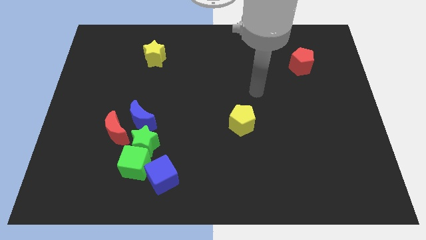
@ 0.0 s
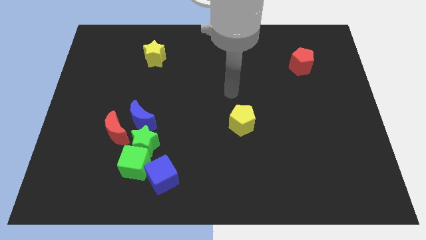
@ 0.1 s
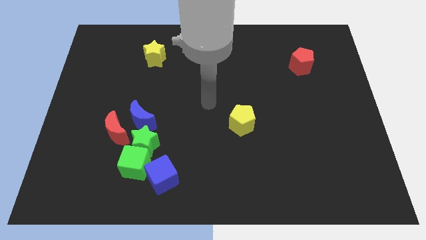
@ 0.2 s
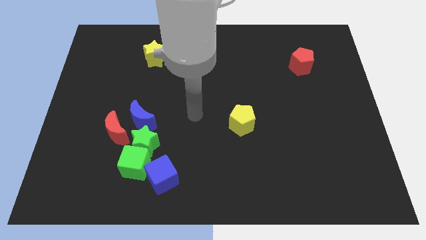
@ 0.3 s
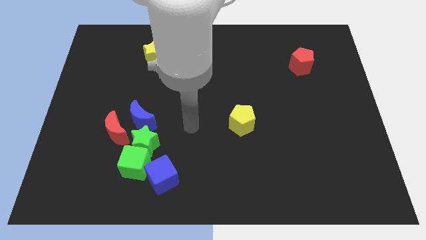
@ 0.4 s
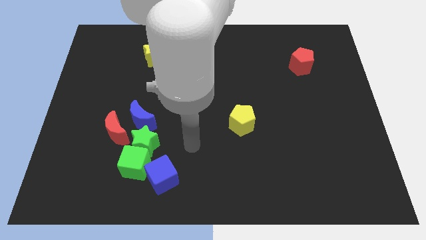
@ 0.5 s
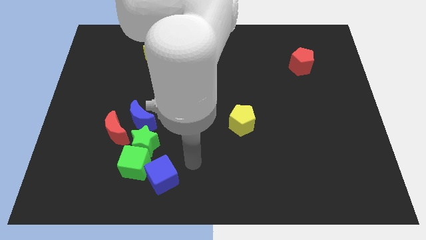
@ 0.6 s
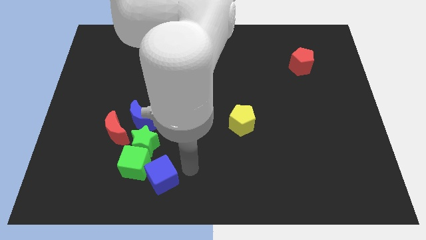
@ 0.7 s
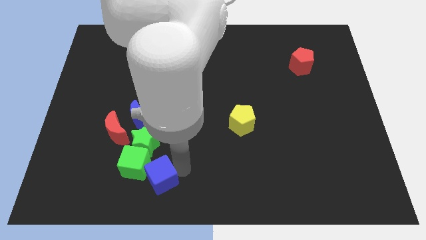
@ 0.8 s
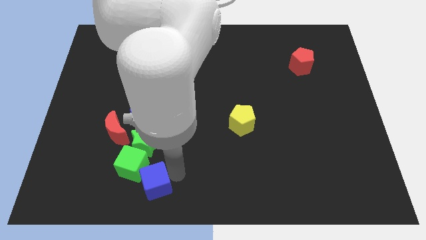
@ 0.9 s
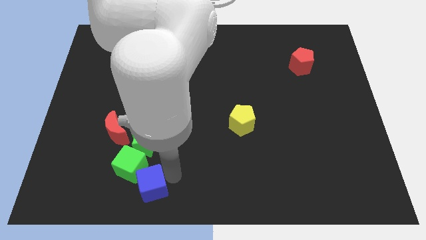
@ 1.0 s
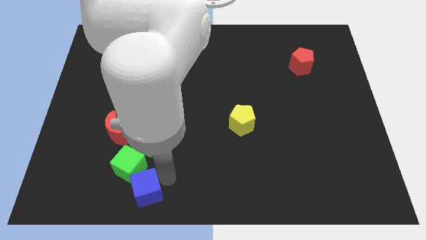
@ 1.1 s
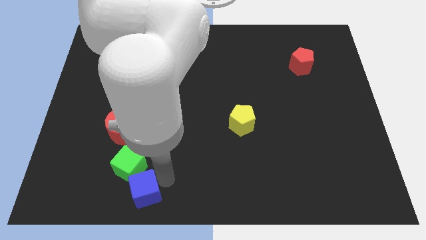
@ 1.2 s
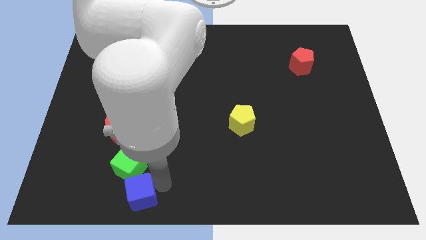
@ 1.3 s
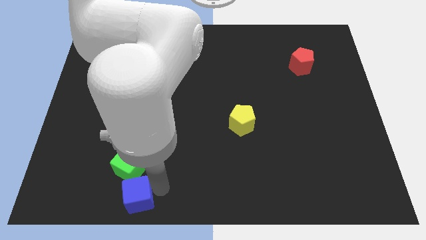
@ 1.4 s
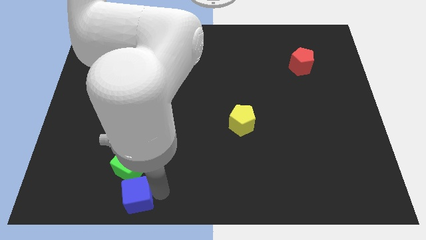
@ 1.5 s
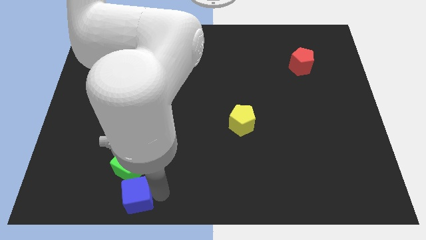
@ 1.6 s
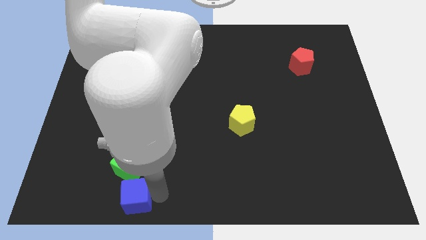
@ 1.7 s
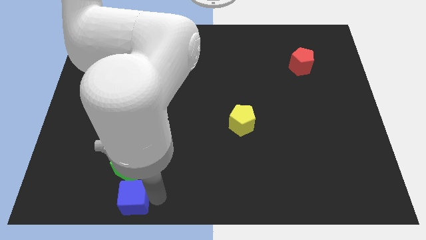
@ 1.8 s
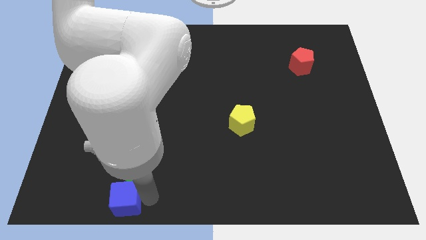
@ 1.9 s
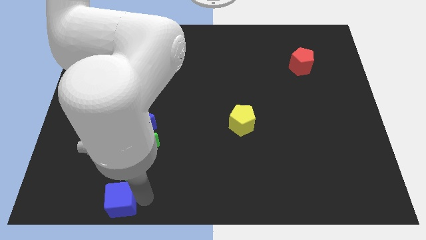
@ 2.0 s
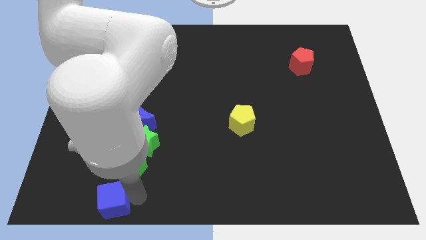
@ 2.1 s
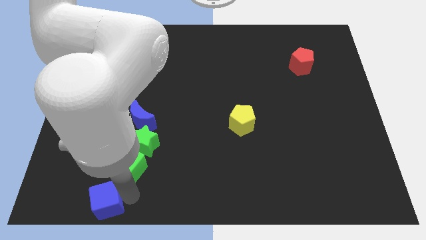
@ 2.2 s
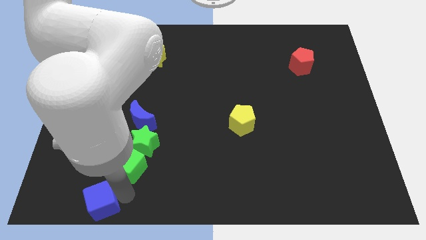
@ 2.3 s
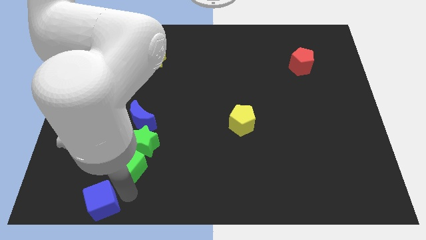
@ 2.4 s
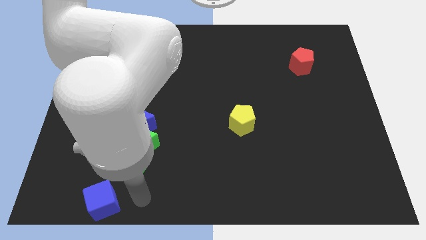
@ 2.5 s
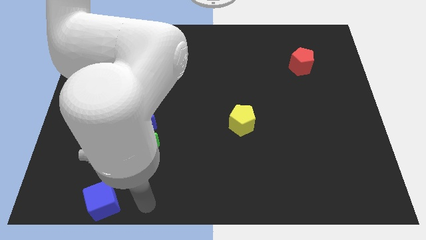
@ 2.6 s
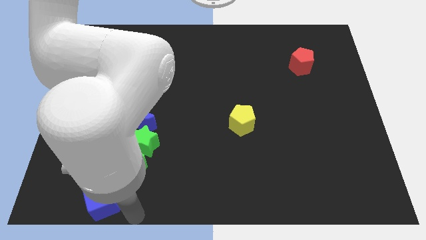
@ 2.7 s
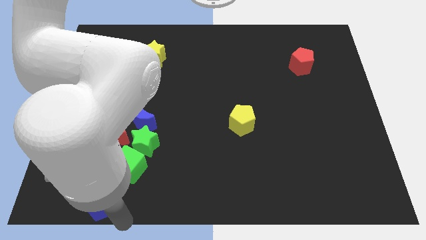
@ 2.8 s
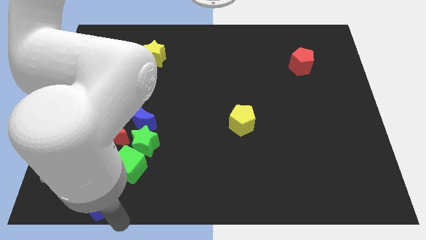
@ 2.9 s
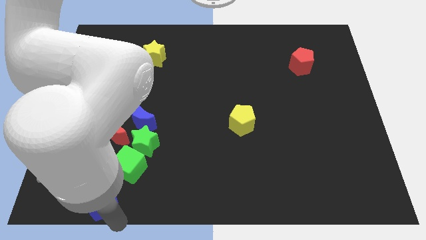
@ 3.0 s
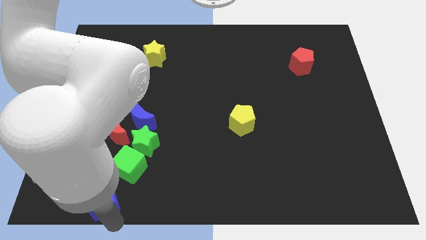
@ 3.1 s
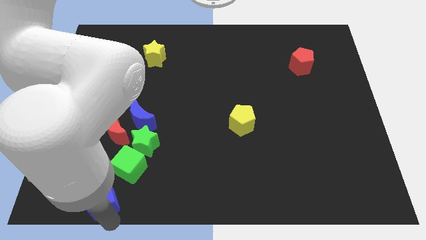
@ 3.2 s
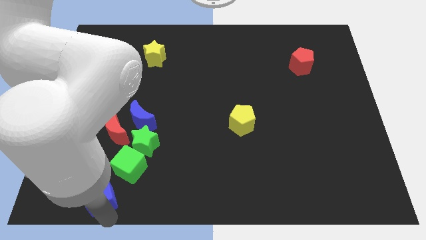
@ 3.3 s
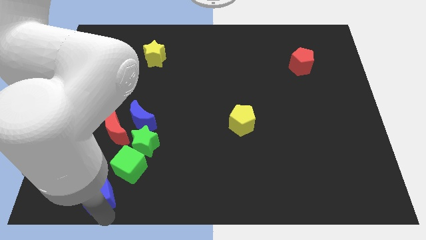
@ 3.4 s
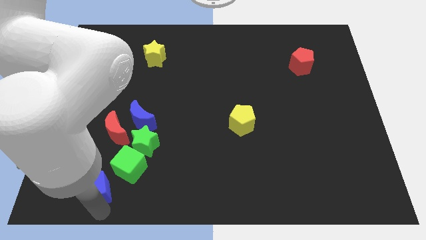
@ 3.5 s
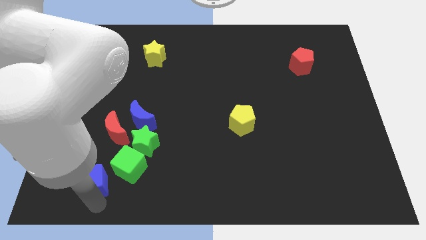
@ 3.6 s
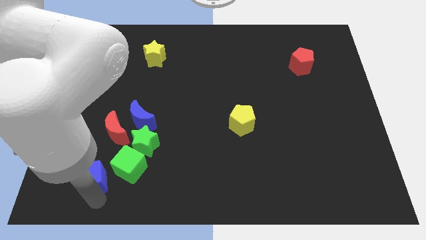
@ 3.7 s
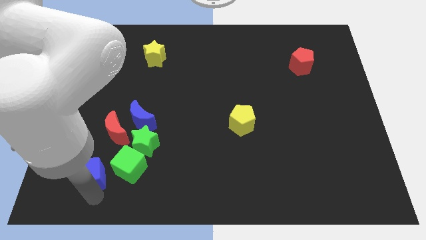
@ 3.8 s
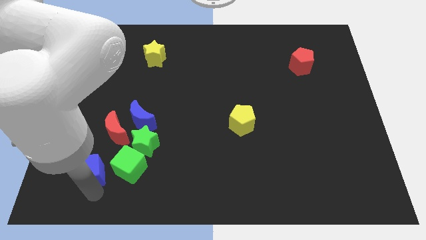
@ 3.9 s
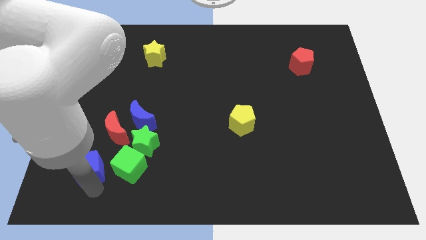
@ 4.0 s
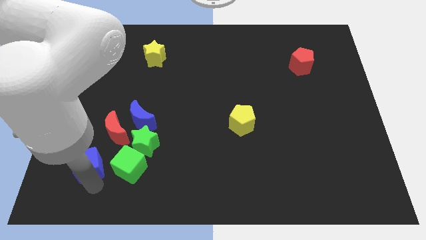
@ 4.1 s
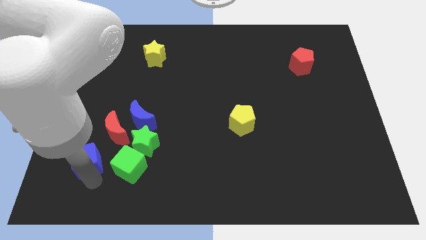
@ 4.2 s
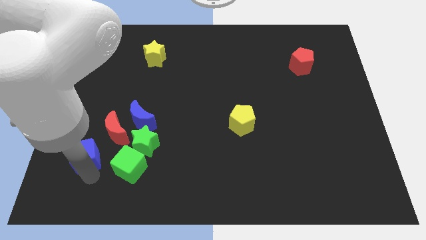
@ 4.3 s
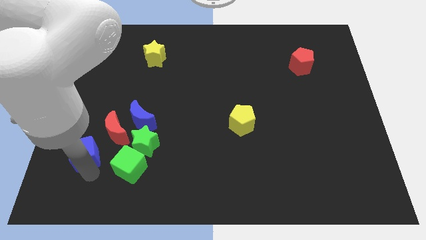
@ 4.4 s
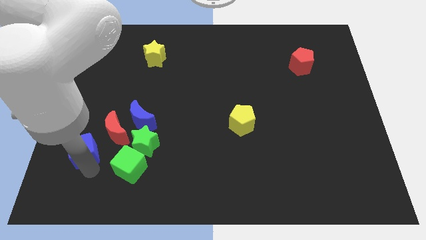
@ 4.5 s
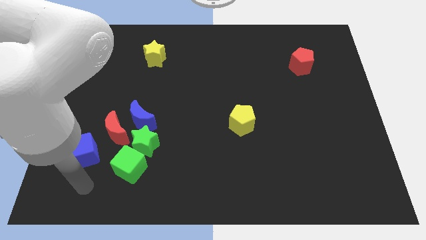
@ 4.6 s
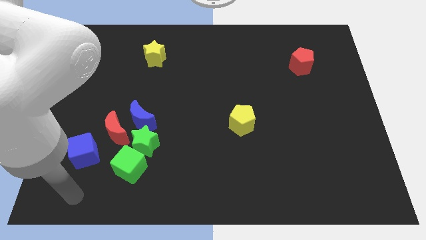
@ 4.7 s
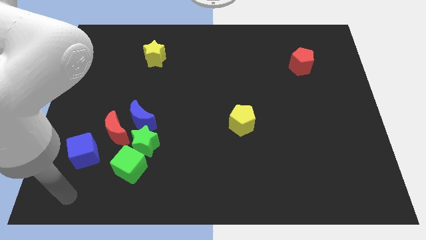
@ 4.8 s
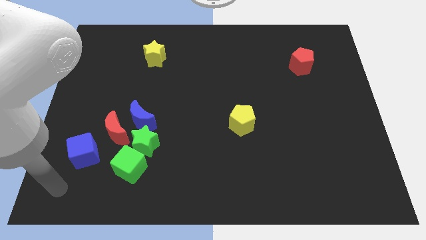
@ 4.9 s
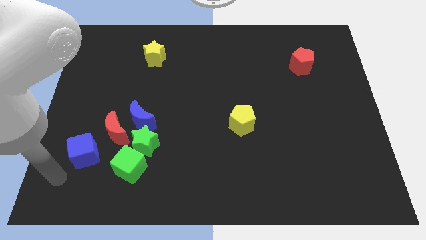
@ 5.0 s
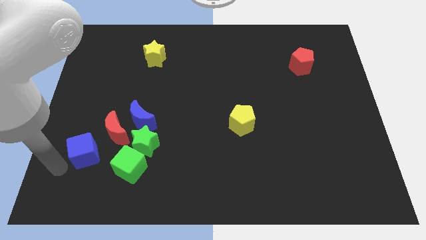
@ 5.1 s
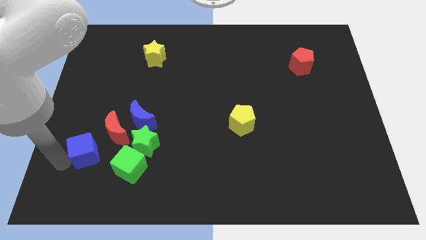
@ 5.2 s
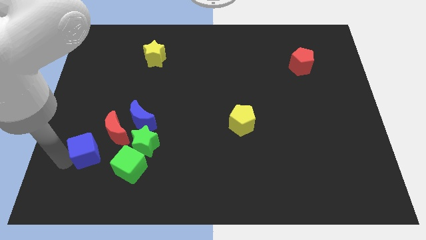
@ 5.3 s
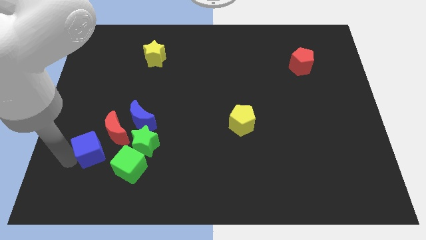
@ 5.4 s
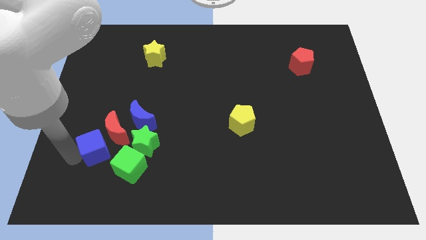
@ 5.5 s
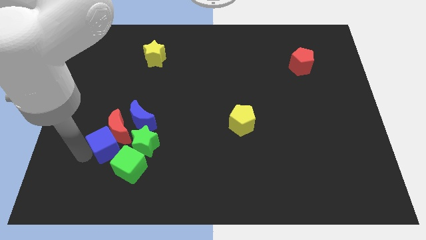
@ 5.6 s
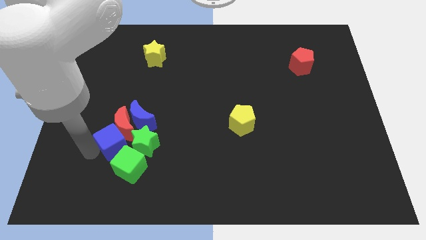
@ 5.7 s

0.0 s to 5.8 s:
push the blue cube to the red moon

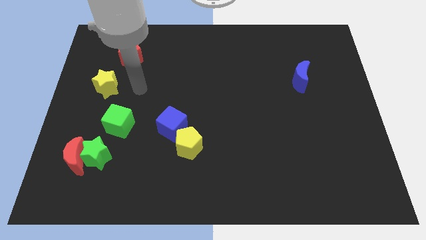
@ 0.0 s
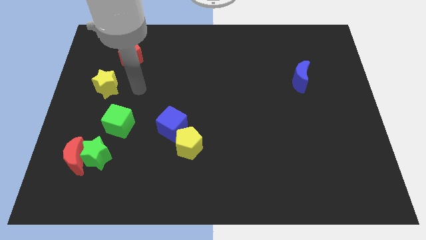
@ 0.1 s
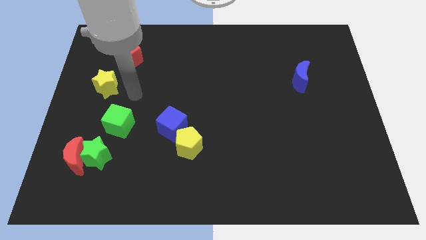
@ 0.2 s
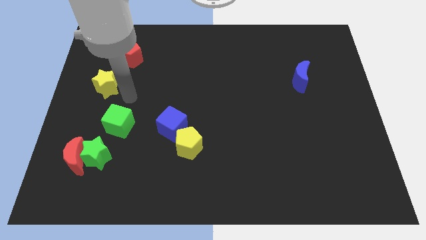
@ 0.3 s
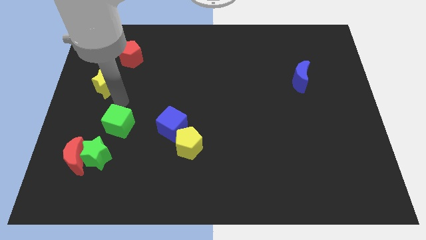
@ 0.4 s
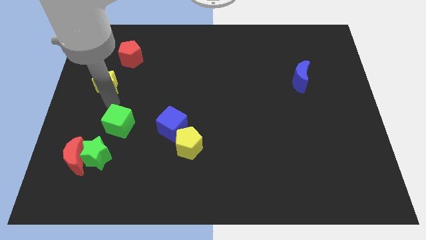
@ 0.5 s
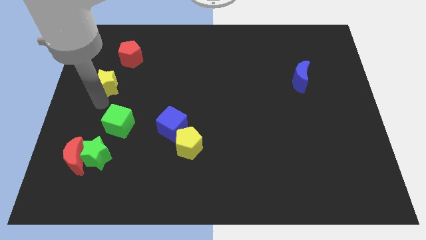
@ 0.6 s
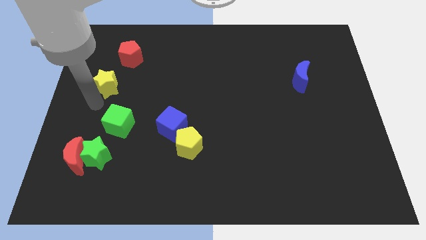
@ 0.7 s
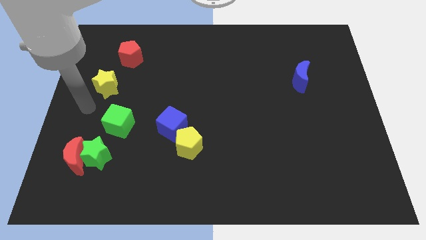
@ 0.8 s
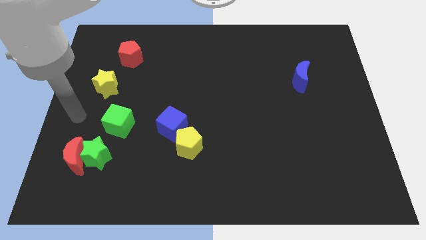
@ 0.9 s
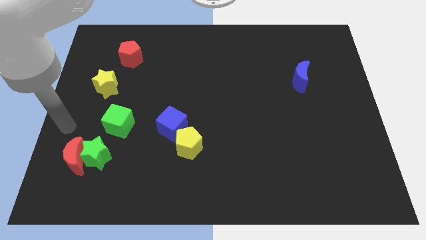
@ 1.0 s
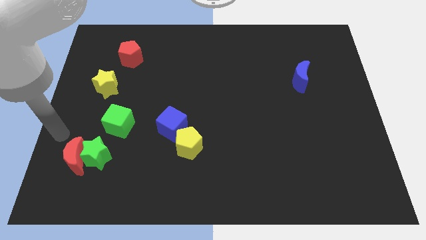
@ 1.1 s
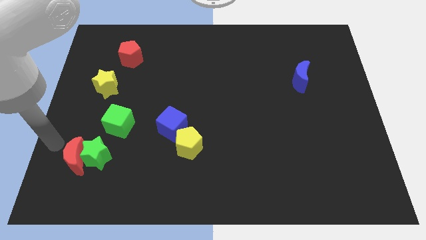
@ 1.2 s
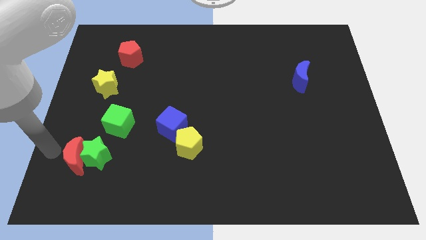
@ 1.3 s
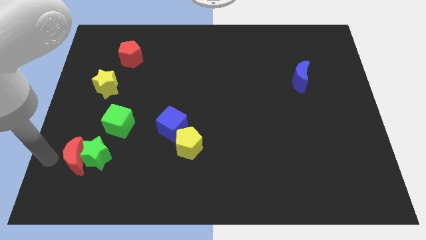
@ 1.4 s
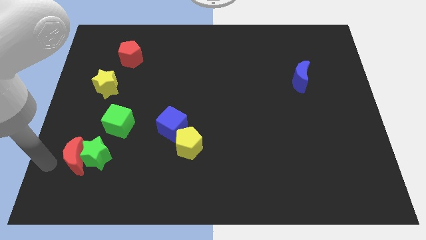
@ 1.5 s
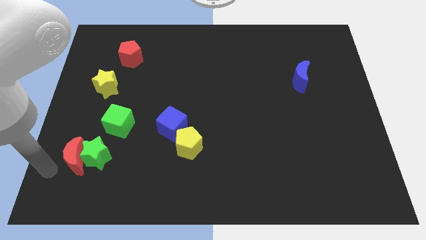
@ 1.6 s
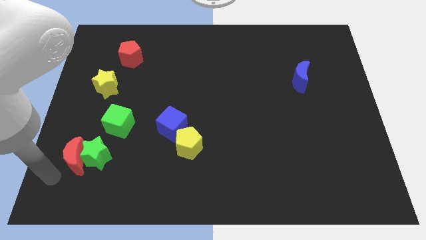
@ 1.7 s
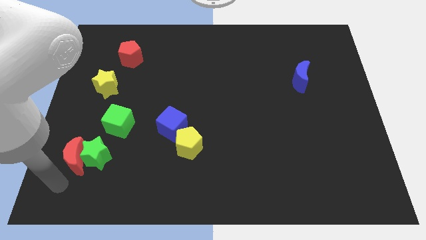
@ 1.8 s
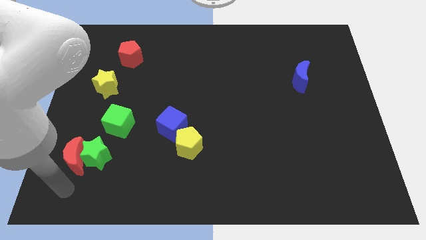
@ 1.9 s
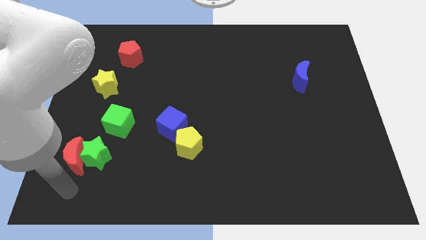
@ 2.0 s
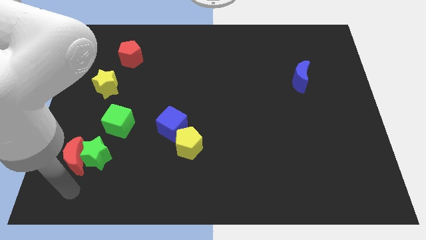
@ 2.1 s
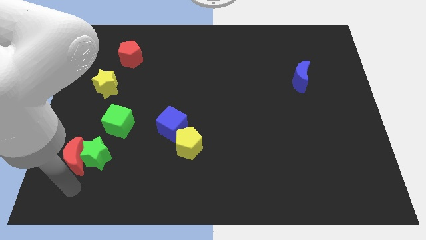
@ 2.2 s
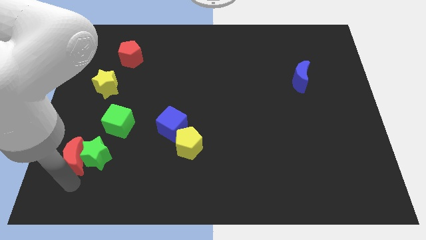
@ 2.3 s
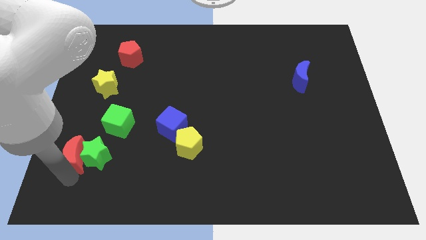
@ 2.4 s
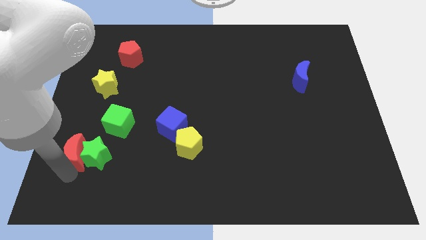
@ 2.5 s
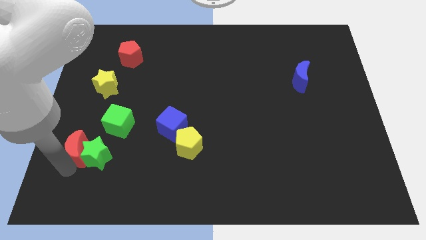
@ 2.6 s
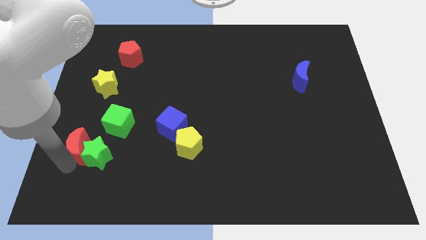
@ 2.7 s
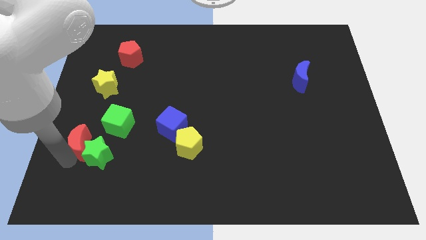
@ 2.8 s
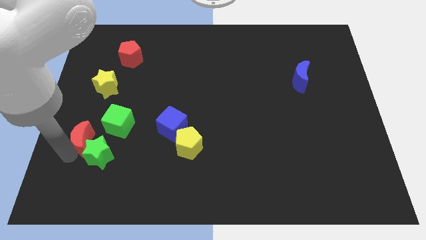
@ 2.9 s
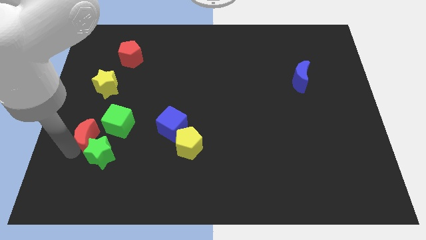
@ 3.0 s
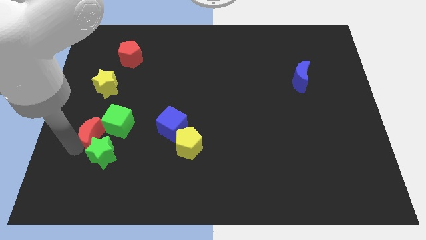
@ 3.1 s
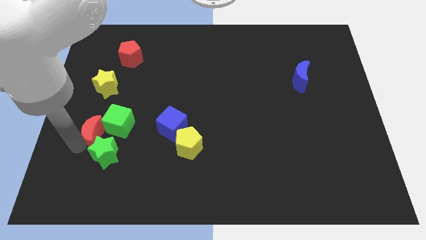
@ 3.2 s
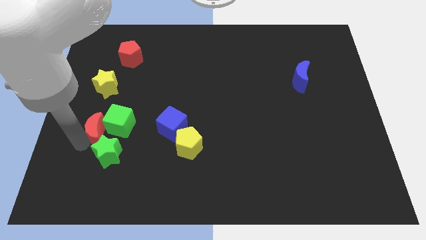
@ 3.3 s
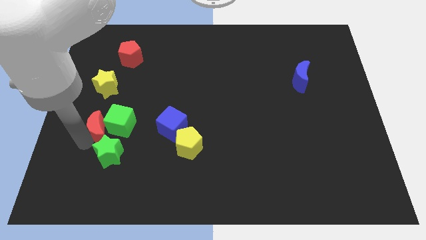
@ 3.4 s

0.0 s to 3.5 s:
move the red moon towards the green cube
